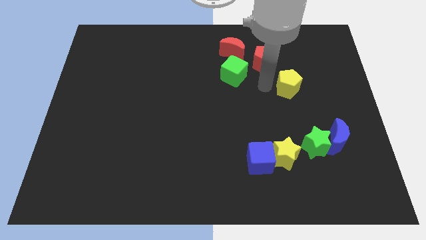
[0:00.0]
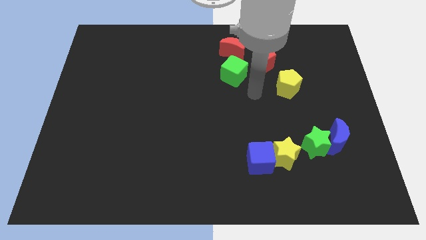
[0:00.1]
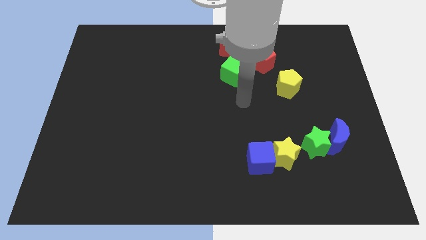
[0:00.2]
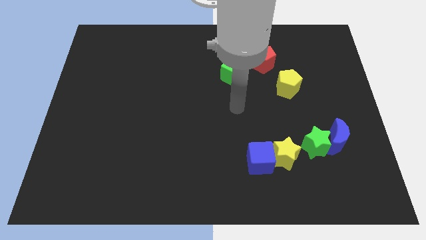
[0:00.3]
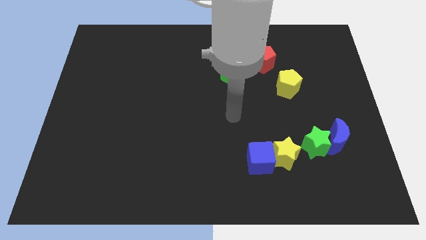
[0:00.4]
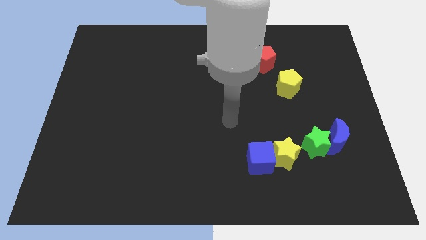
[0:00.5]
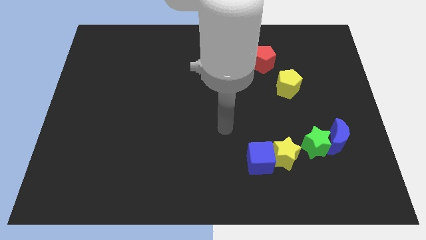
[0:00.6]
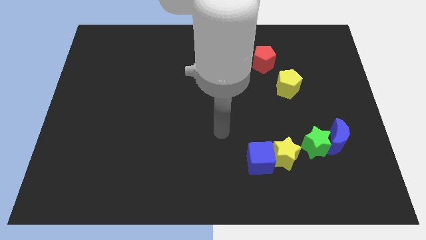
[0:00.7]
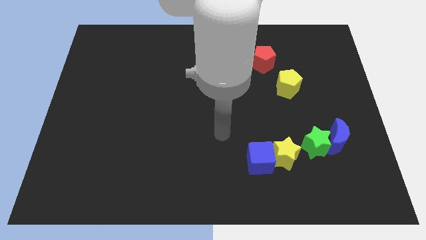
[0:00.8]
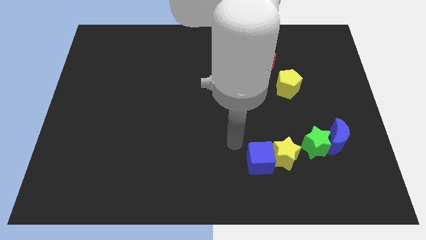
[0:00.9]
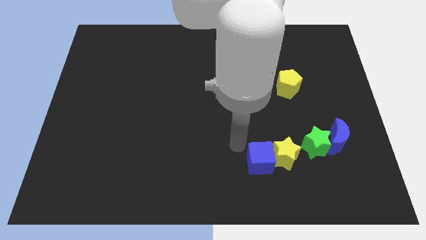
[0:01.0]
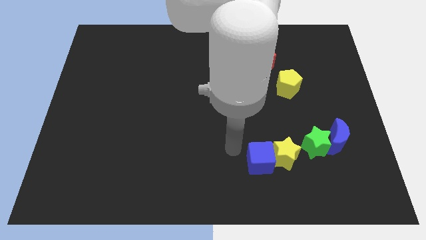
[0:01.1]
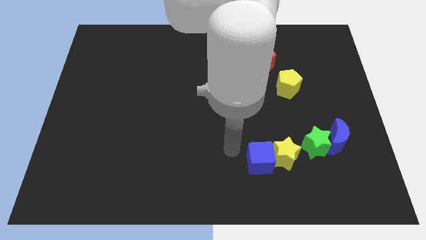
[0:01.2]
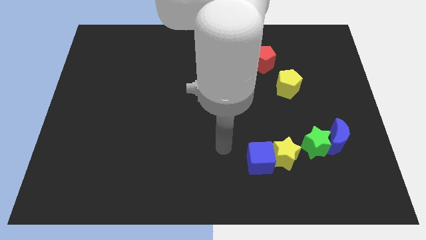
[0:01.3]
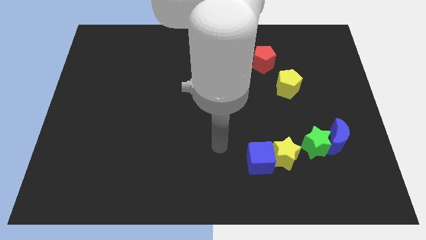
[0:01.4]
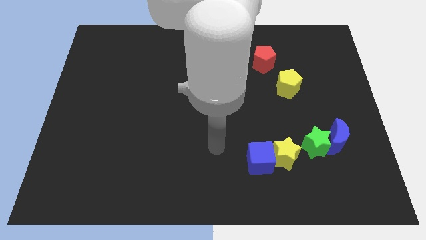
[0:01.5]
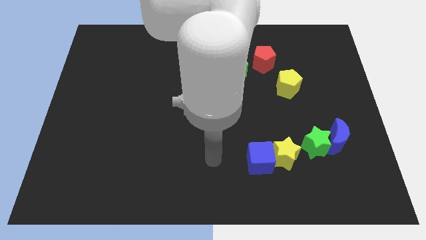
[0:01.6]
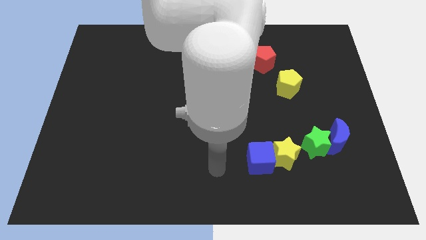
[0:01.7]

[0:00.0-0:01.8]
point your arm at the left of the blue cube

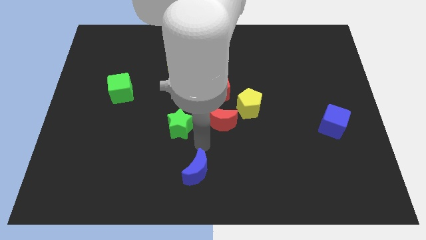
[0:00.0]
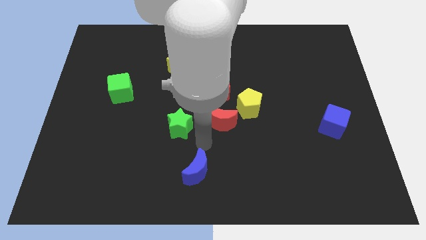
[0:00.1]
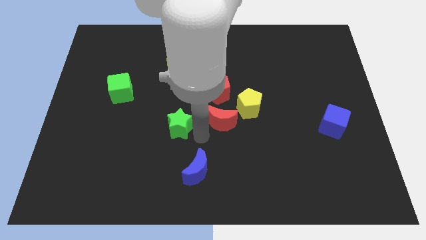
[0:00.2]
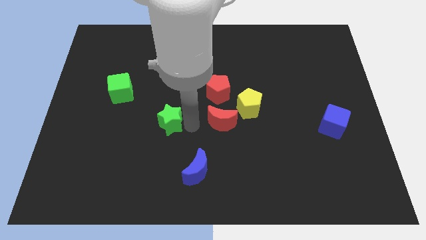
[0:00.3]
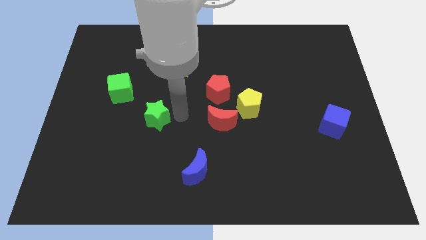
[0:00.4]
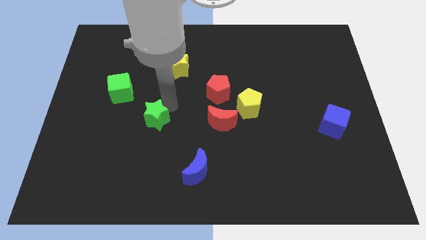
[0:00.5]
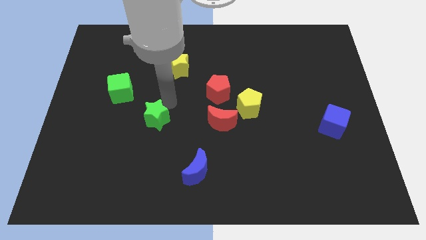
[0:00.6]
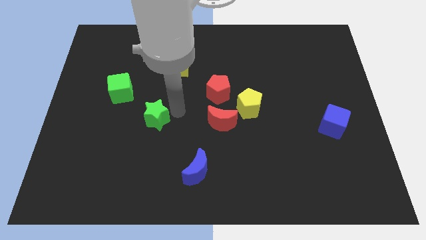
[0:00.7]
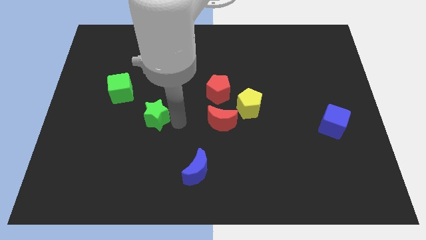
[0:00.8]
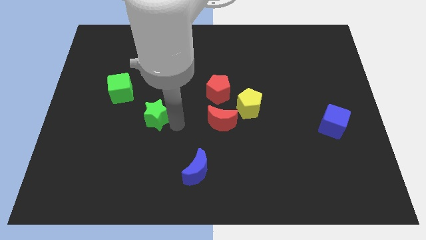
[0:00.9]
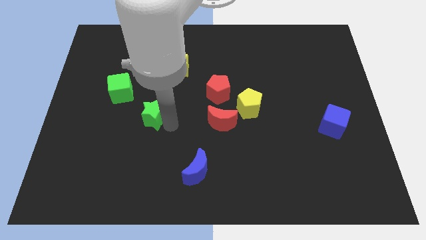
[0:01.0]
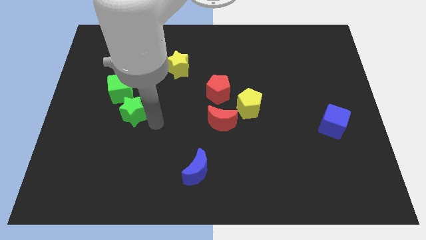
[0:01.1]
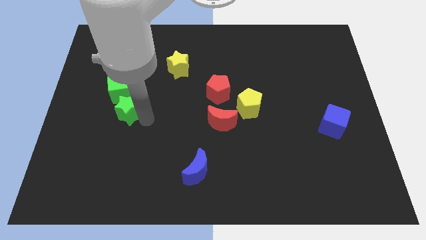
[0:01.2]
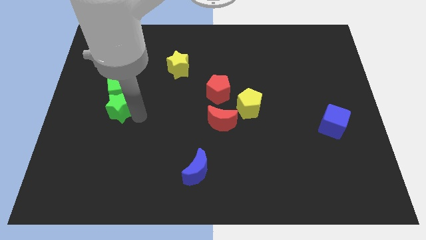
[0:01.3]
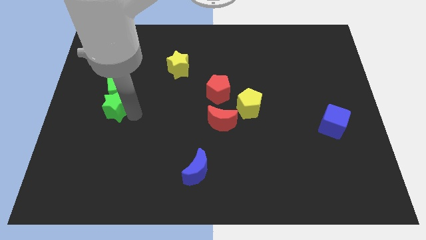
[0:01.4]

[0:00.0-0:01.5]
move the green star into the green cube

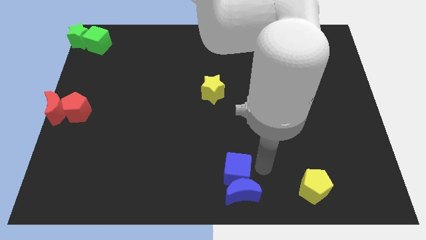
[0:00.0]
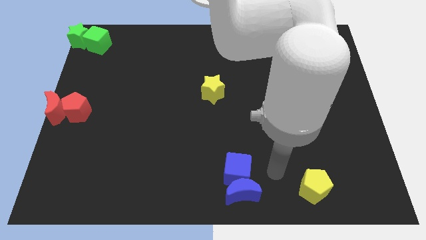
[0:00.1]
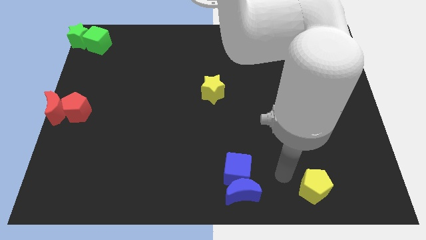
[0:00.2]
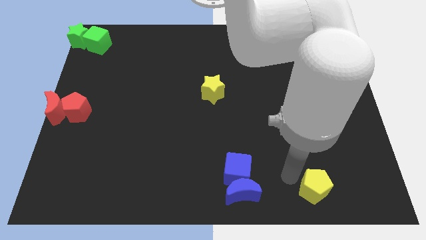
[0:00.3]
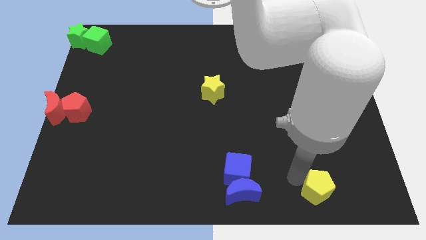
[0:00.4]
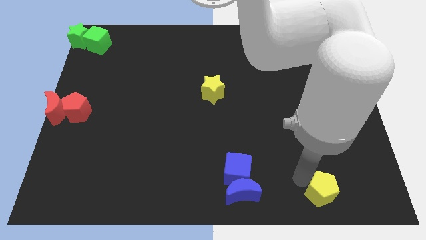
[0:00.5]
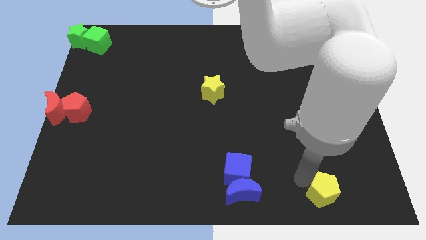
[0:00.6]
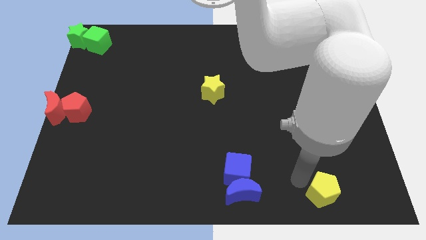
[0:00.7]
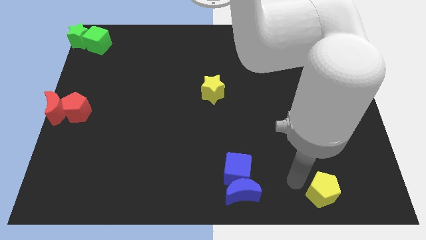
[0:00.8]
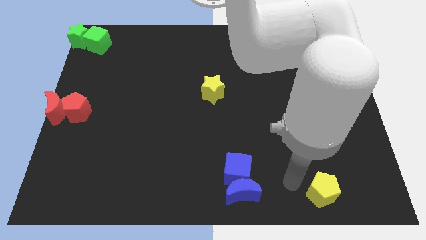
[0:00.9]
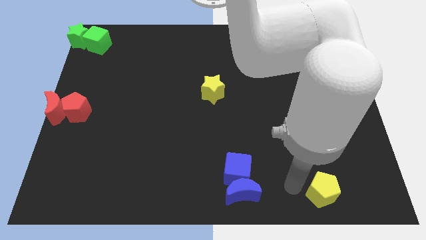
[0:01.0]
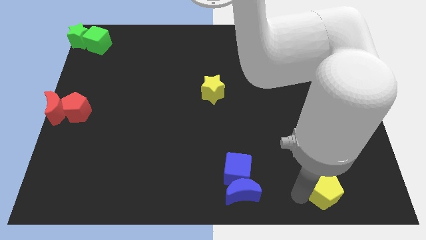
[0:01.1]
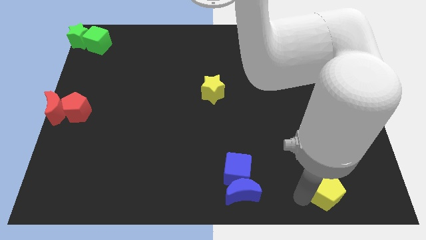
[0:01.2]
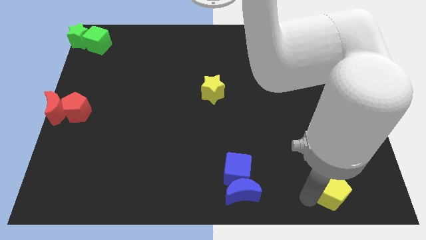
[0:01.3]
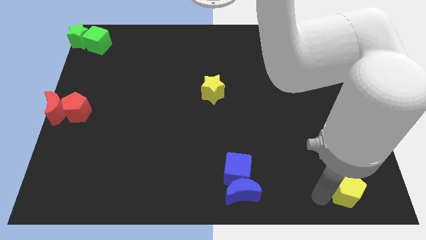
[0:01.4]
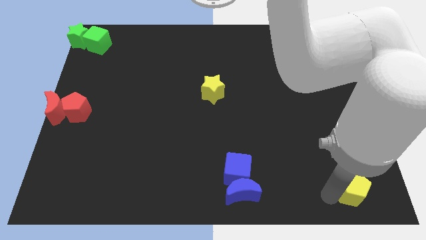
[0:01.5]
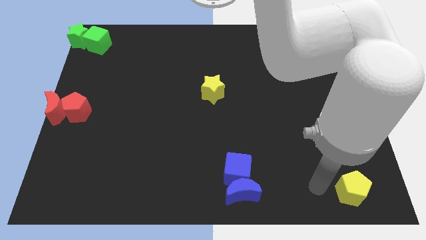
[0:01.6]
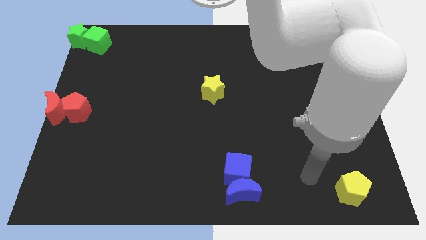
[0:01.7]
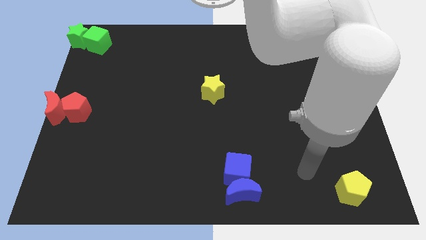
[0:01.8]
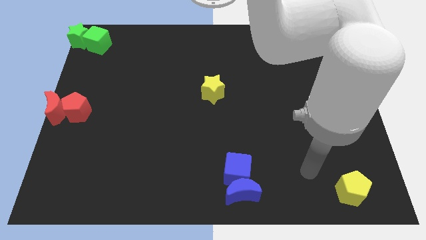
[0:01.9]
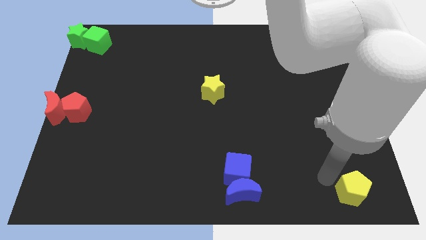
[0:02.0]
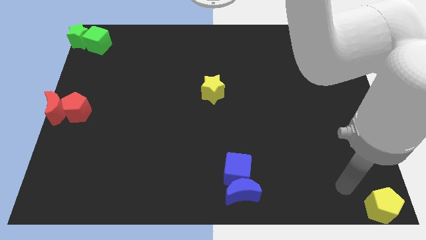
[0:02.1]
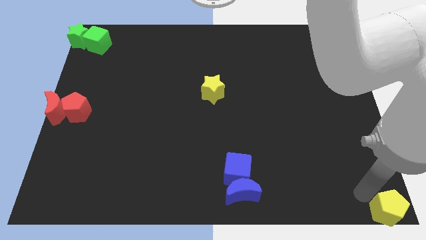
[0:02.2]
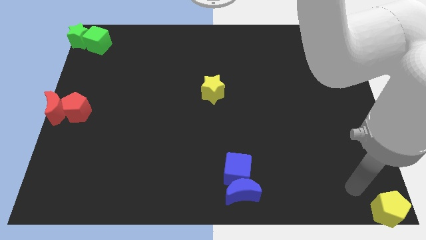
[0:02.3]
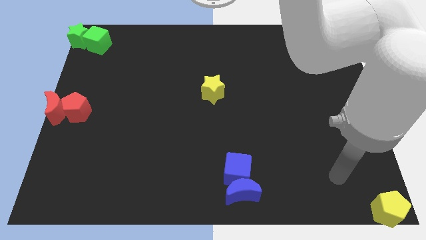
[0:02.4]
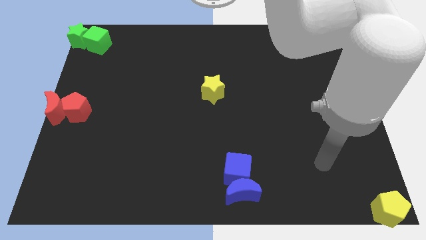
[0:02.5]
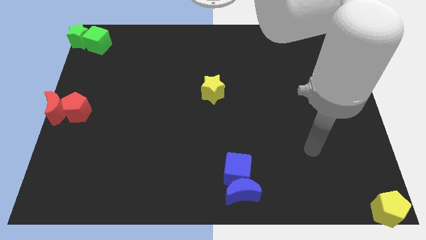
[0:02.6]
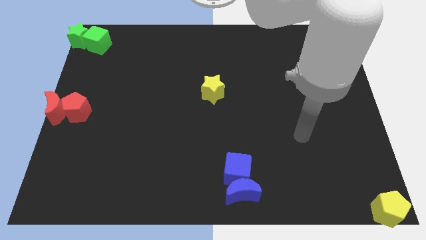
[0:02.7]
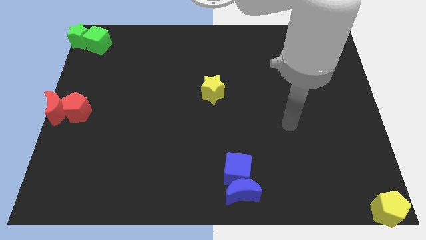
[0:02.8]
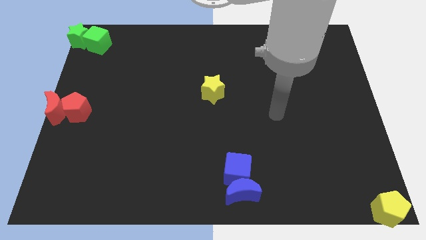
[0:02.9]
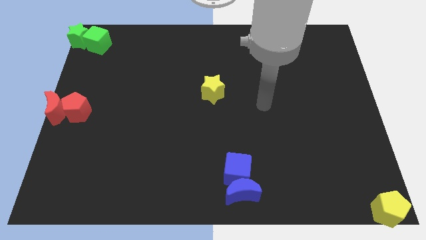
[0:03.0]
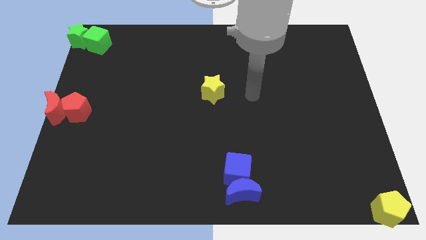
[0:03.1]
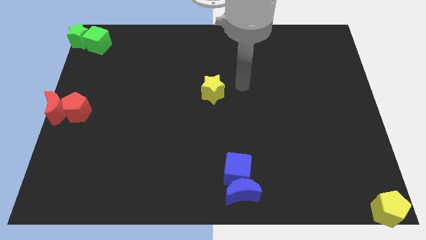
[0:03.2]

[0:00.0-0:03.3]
move the yellow pentagon to the bottom right corner

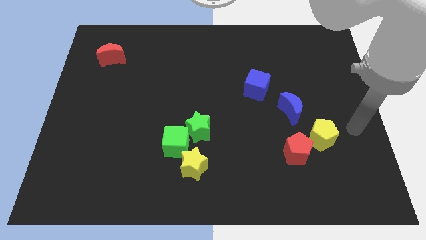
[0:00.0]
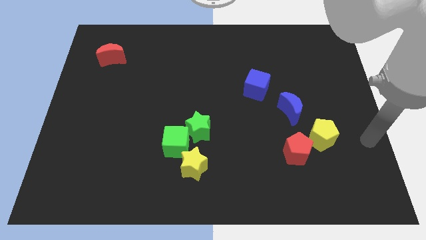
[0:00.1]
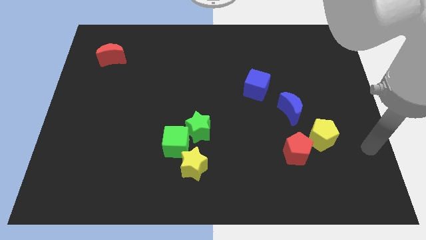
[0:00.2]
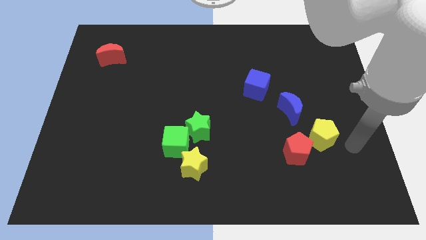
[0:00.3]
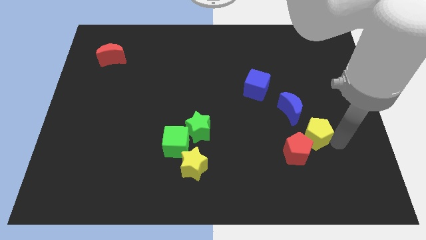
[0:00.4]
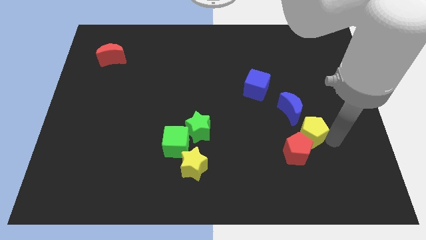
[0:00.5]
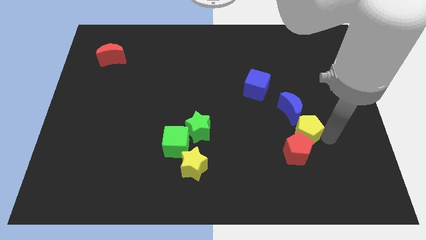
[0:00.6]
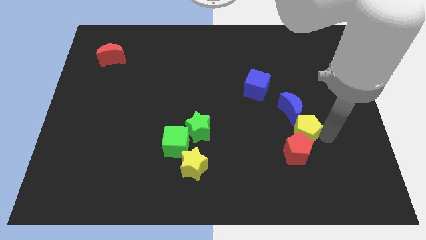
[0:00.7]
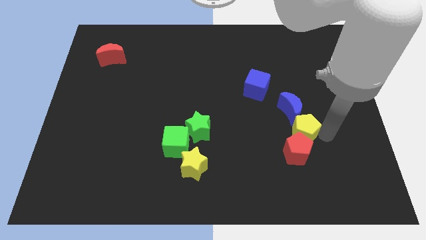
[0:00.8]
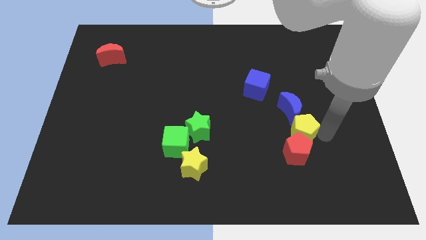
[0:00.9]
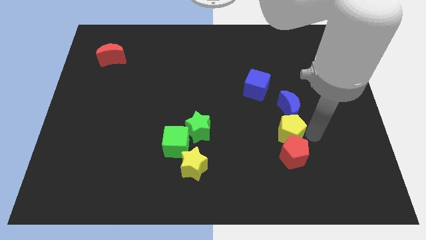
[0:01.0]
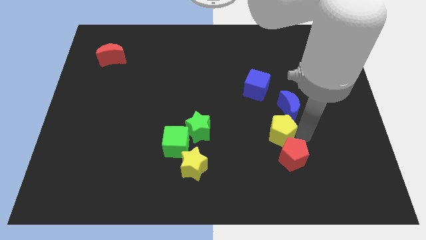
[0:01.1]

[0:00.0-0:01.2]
place yellow pentagon in between blue moon and red pentagon

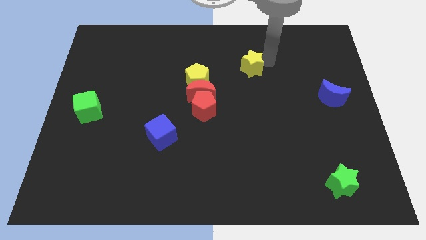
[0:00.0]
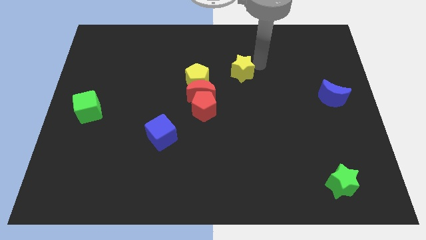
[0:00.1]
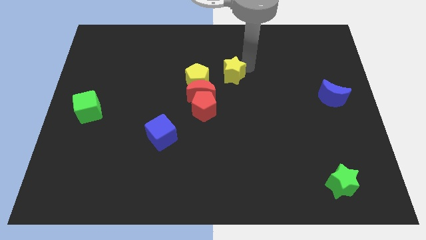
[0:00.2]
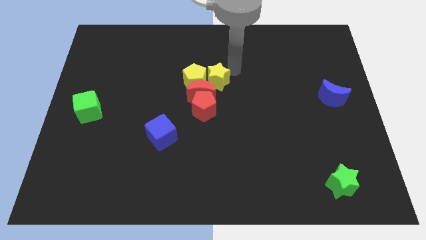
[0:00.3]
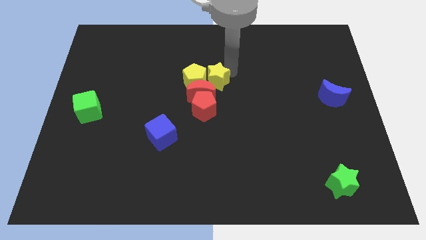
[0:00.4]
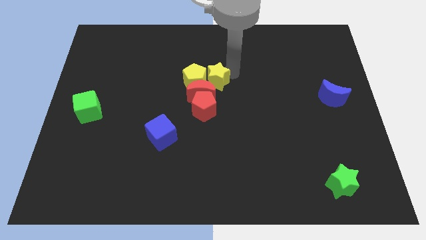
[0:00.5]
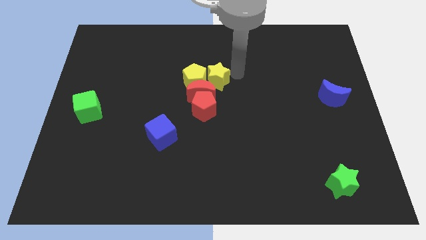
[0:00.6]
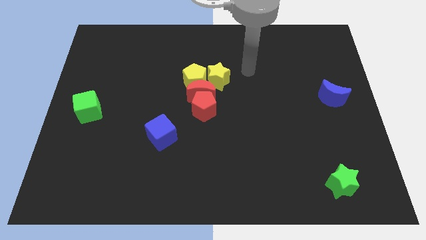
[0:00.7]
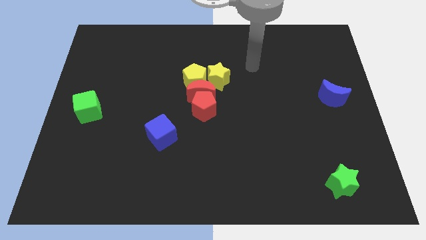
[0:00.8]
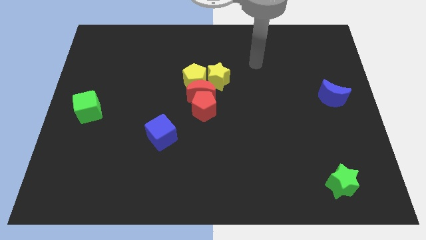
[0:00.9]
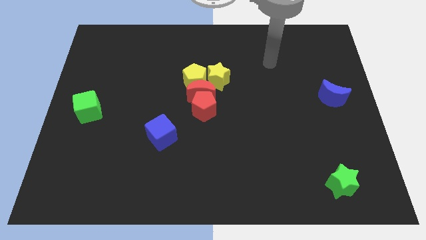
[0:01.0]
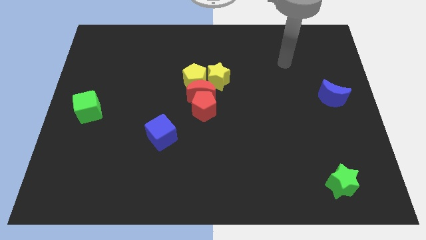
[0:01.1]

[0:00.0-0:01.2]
push the yellow star into the yellow pentagon
